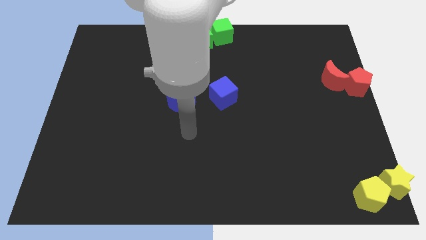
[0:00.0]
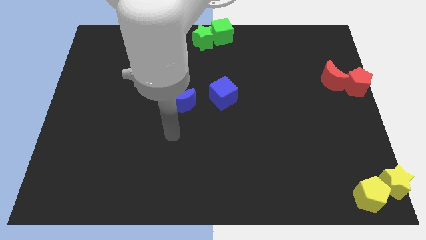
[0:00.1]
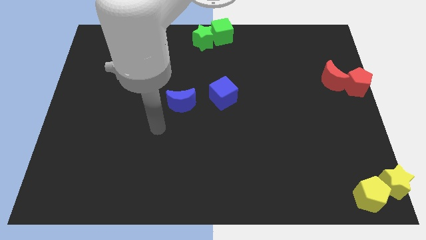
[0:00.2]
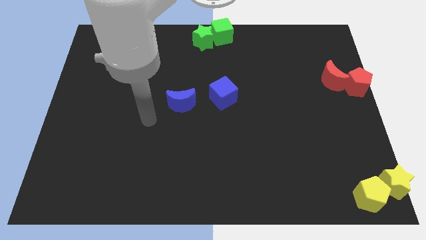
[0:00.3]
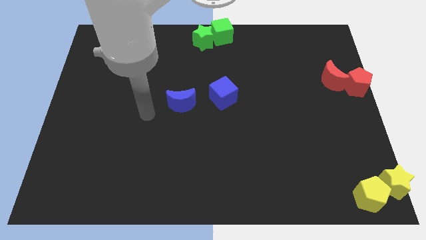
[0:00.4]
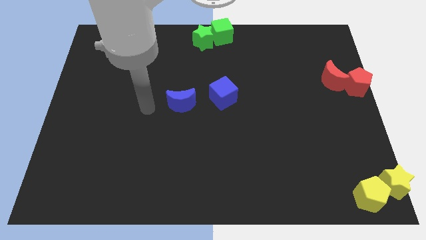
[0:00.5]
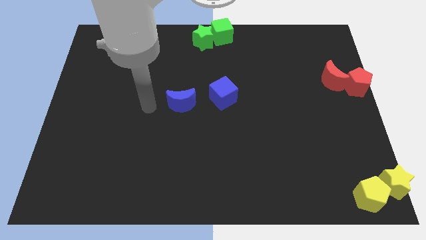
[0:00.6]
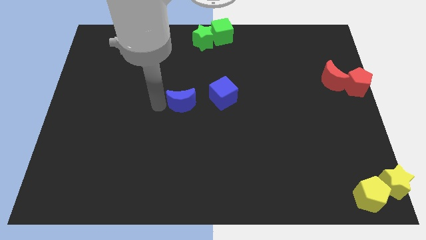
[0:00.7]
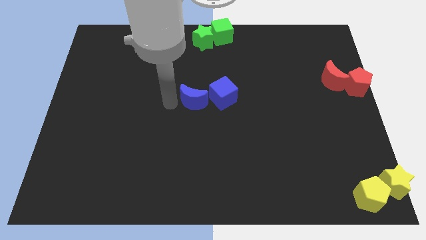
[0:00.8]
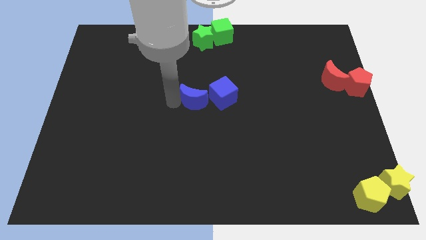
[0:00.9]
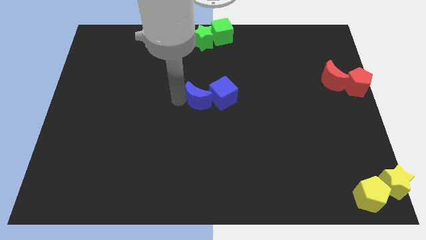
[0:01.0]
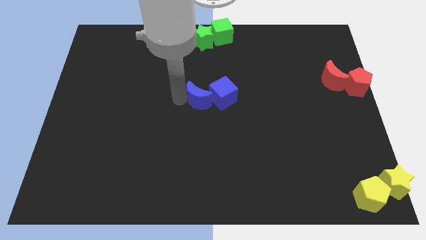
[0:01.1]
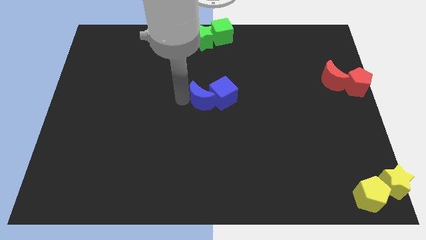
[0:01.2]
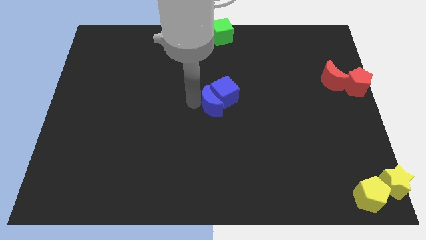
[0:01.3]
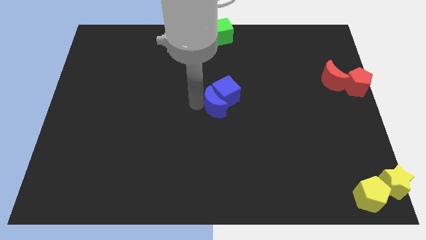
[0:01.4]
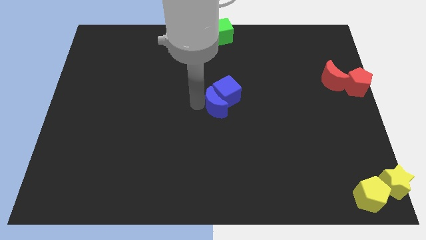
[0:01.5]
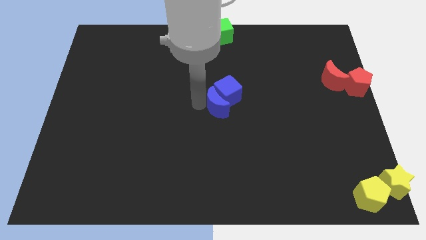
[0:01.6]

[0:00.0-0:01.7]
push the blue crescent into the blue cube

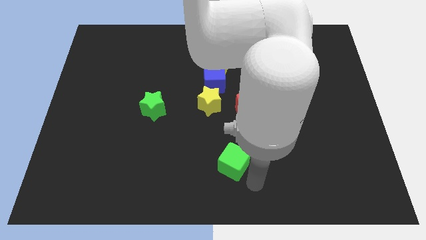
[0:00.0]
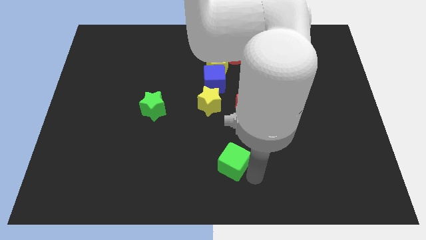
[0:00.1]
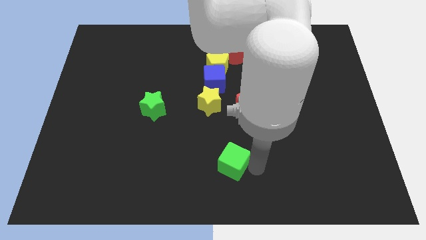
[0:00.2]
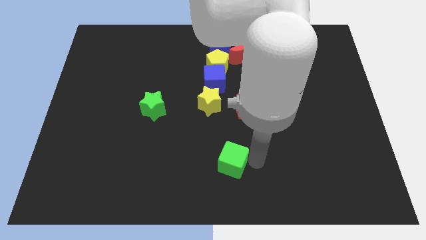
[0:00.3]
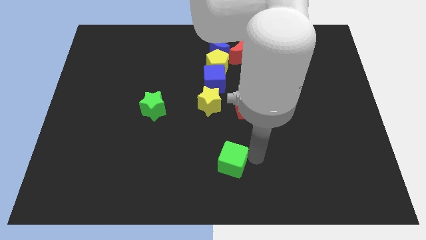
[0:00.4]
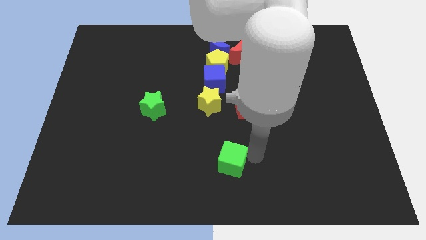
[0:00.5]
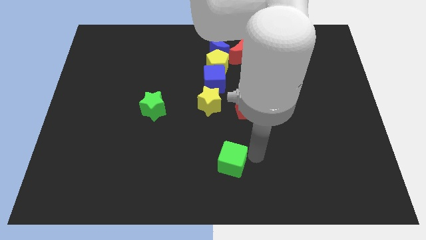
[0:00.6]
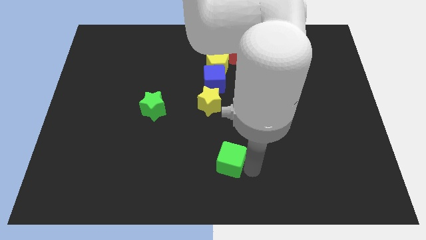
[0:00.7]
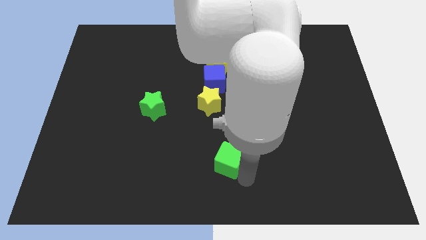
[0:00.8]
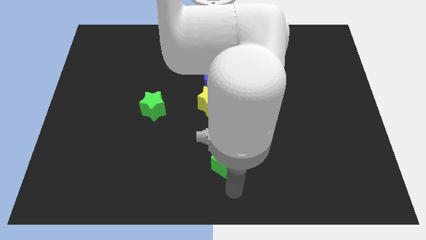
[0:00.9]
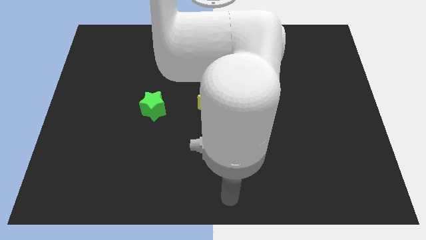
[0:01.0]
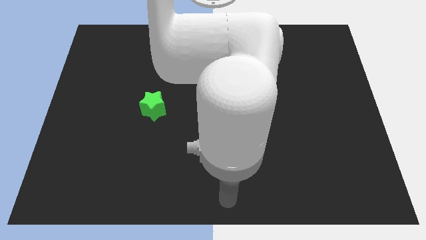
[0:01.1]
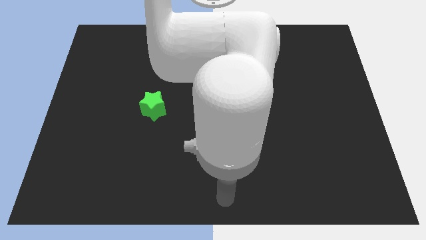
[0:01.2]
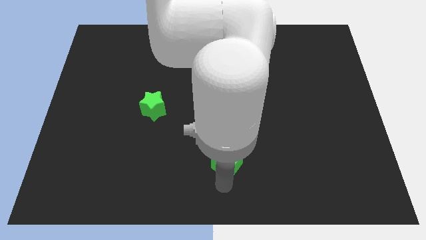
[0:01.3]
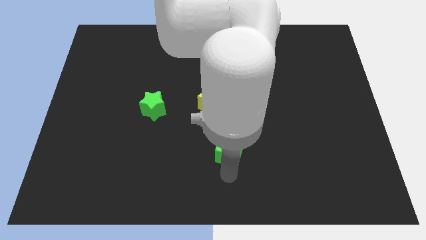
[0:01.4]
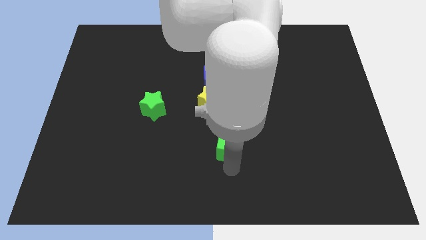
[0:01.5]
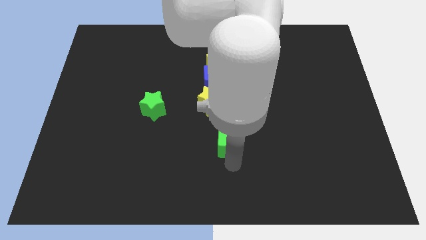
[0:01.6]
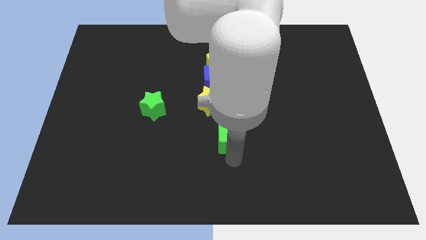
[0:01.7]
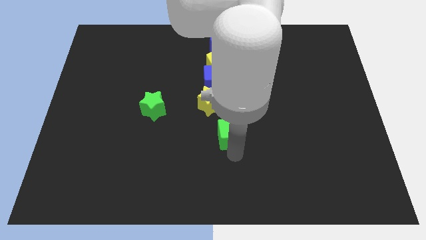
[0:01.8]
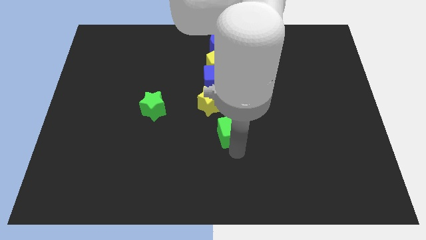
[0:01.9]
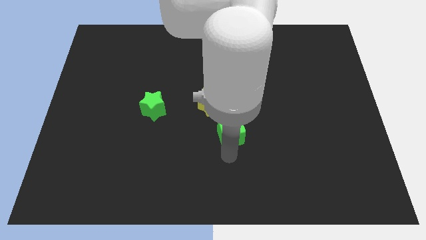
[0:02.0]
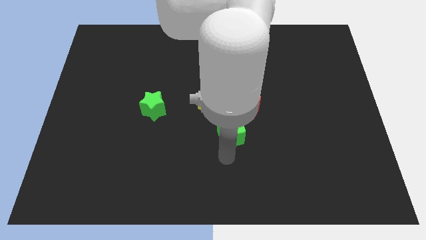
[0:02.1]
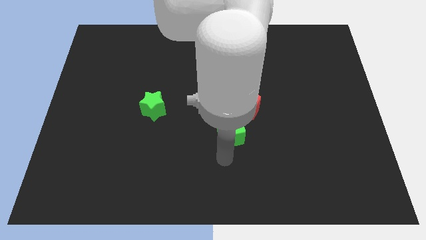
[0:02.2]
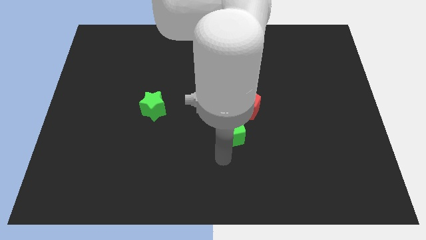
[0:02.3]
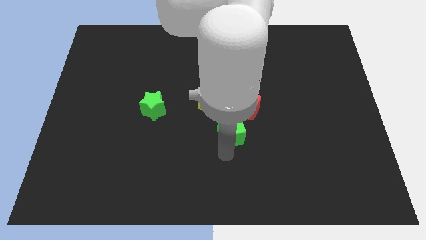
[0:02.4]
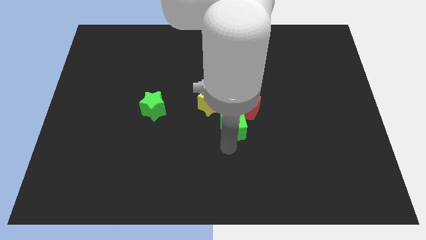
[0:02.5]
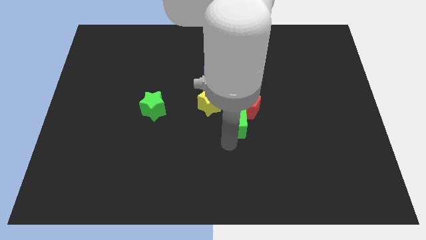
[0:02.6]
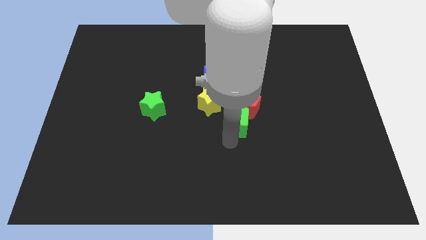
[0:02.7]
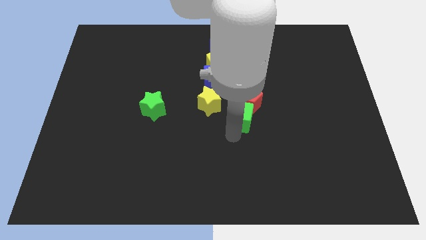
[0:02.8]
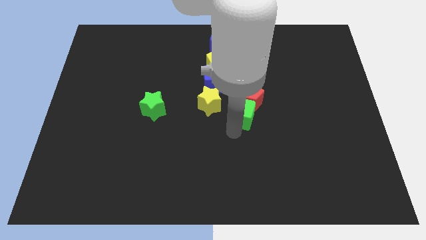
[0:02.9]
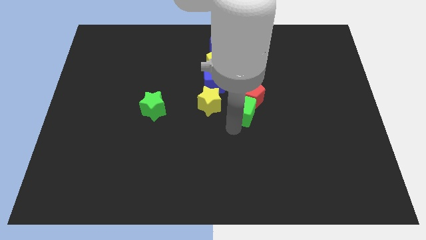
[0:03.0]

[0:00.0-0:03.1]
push the green cube into the red pentagon

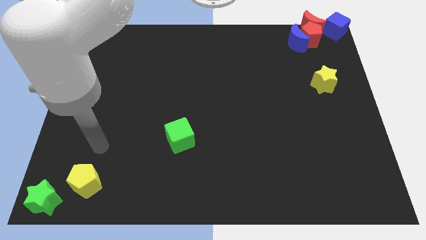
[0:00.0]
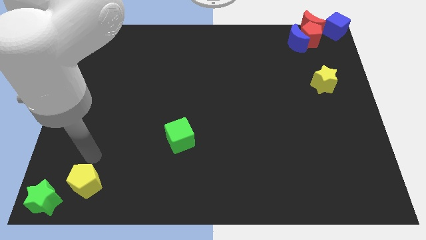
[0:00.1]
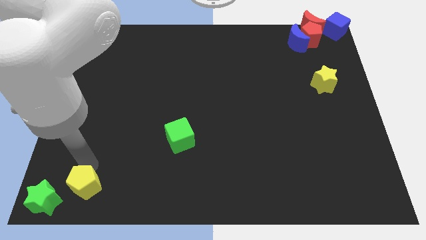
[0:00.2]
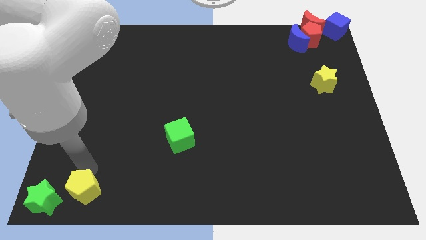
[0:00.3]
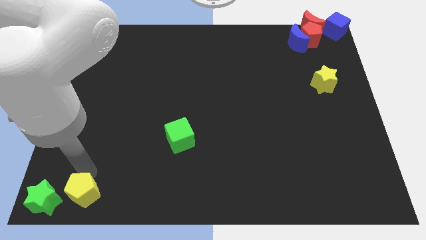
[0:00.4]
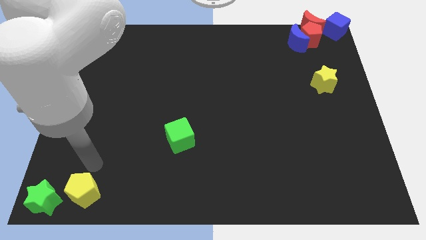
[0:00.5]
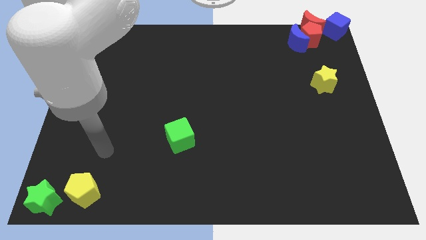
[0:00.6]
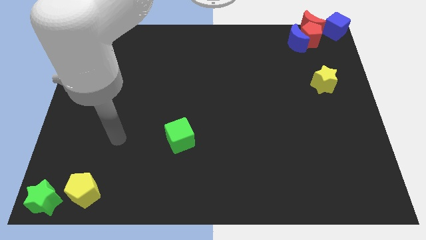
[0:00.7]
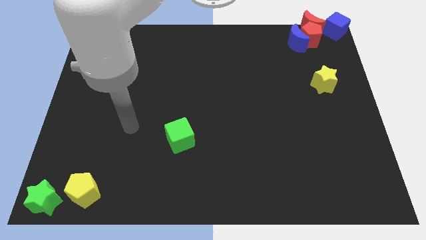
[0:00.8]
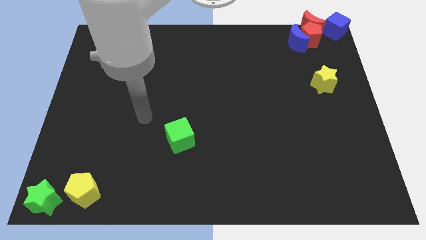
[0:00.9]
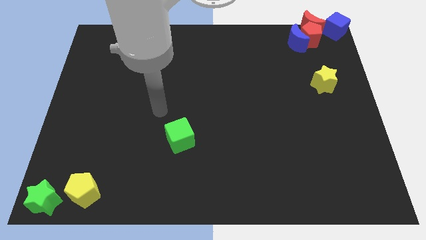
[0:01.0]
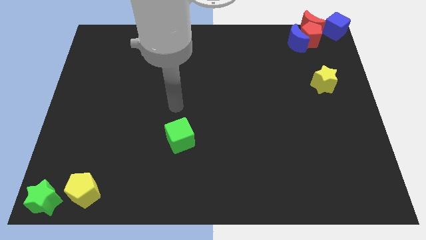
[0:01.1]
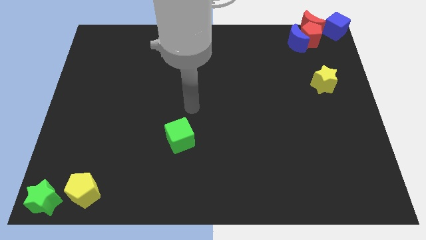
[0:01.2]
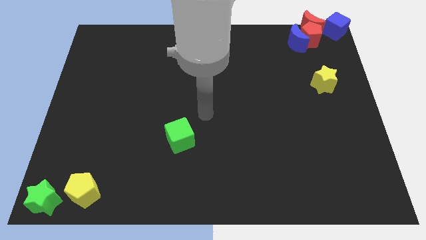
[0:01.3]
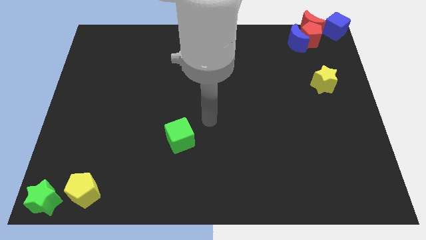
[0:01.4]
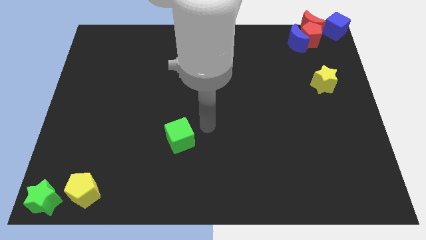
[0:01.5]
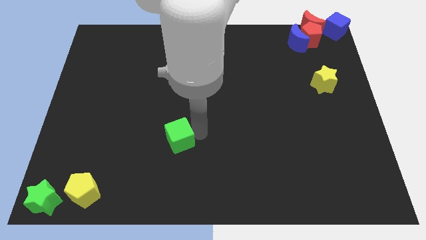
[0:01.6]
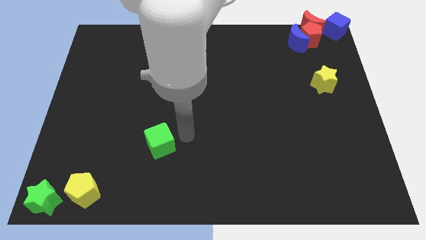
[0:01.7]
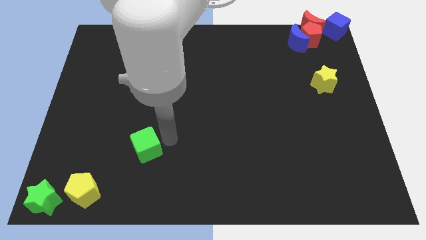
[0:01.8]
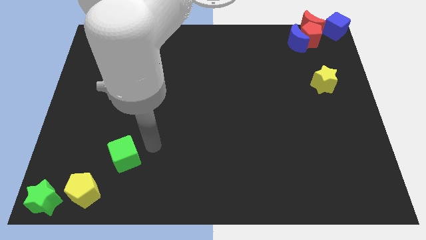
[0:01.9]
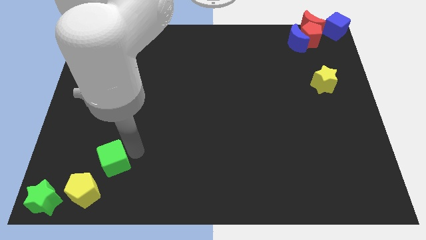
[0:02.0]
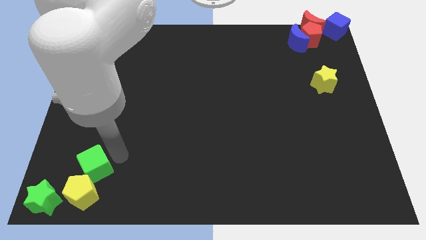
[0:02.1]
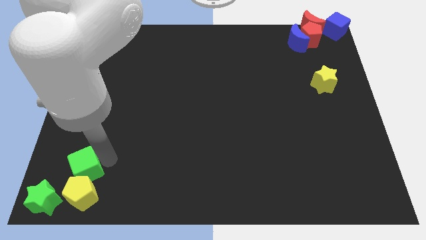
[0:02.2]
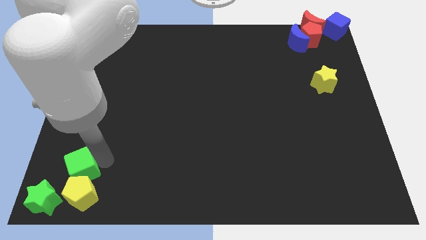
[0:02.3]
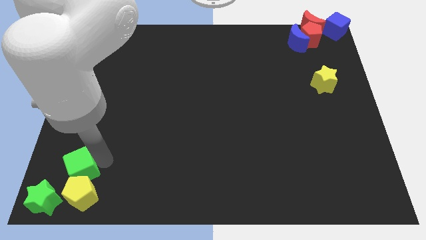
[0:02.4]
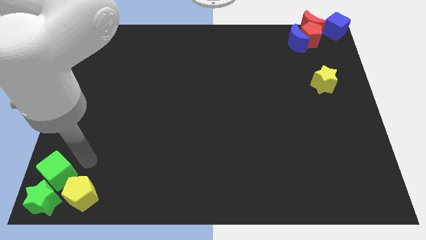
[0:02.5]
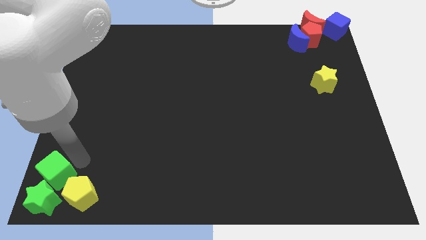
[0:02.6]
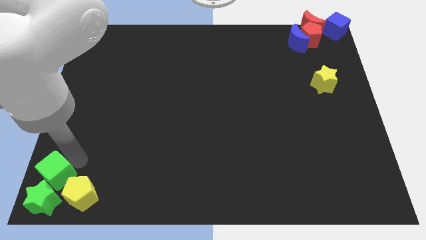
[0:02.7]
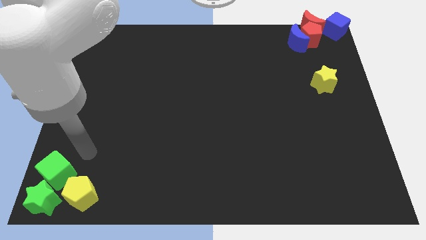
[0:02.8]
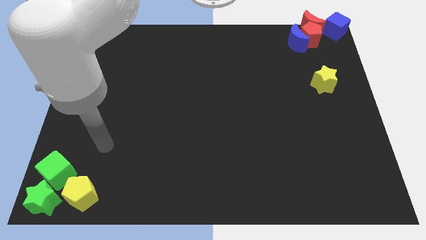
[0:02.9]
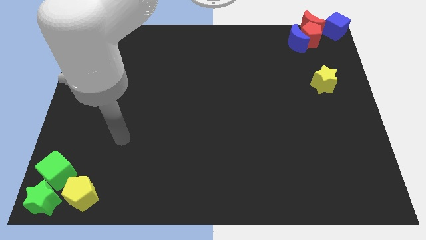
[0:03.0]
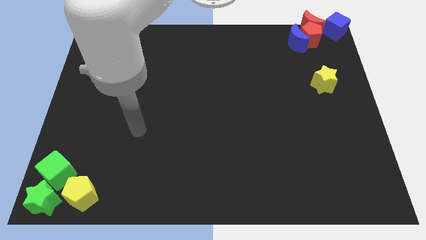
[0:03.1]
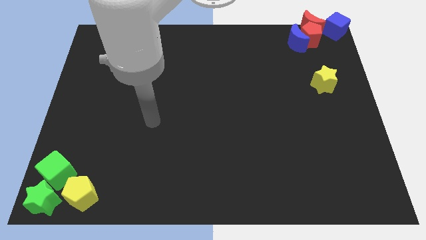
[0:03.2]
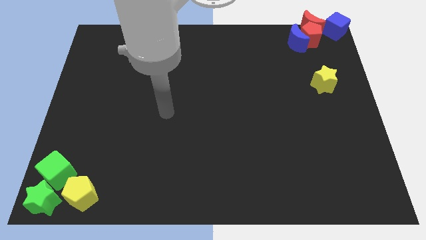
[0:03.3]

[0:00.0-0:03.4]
push the green cube and yellow pentagon to the bottom left corner of the board

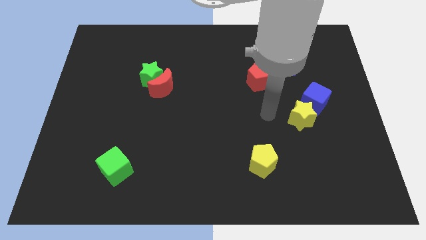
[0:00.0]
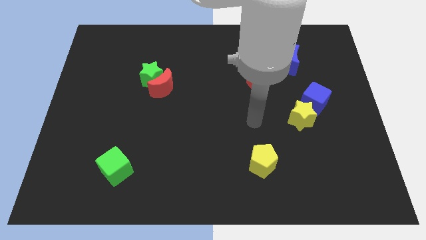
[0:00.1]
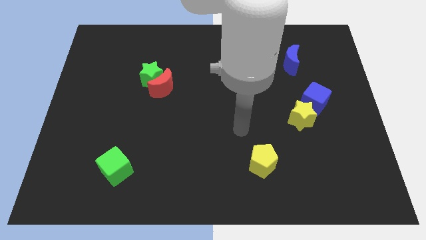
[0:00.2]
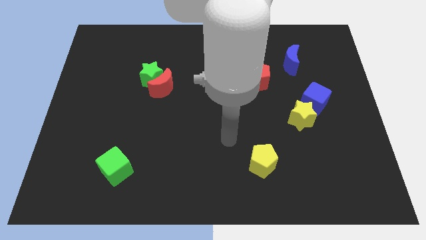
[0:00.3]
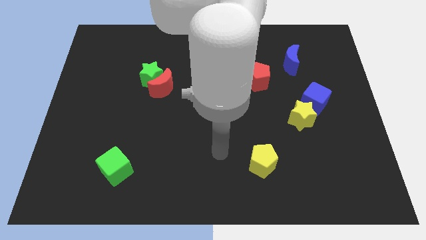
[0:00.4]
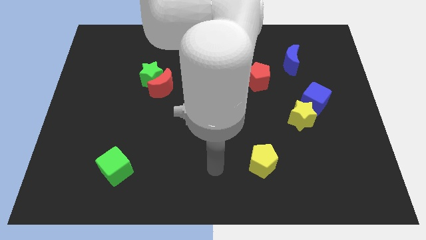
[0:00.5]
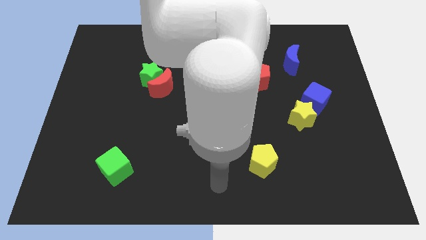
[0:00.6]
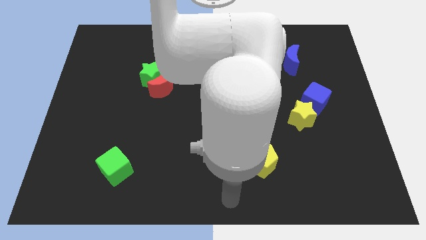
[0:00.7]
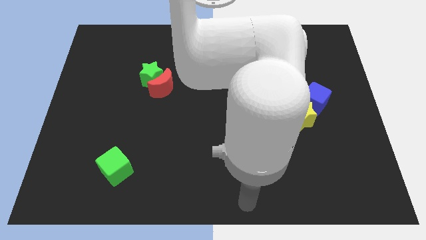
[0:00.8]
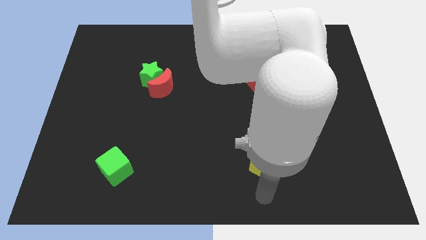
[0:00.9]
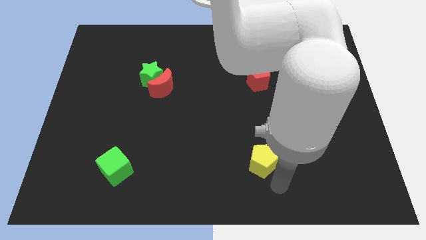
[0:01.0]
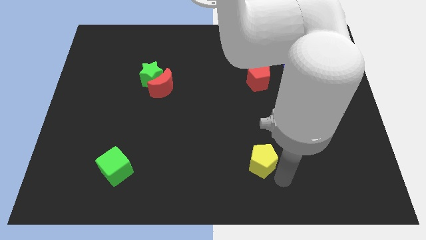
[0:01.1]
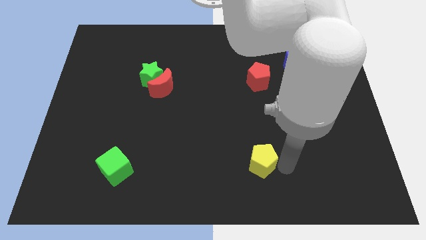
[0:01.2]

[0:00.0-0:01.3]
place your arm at the right side of the yellow pentagon
